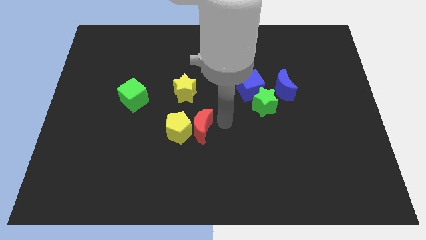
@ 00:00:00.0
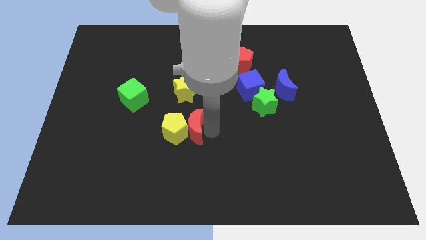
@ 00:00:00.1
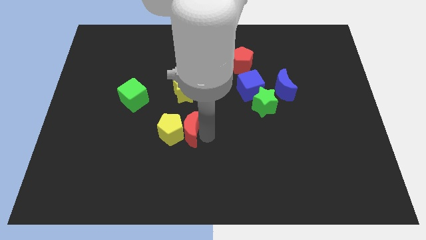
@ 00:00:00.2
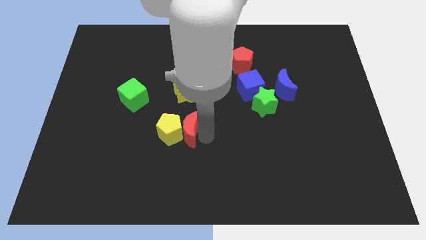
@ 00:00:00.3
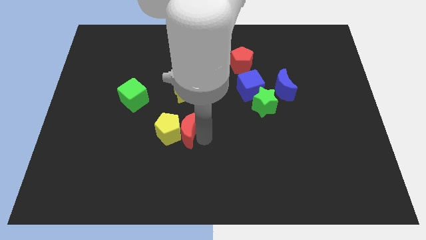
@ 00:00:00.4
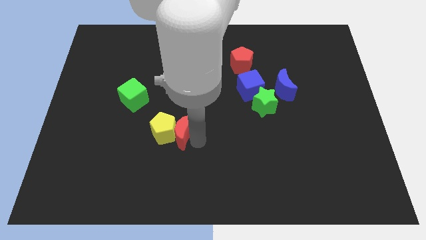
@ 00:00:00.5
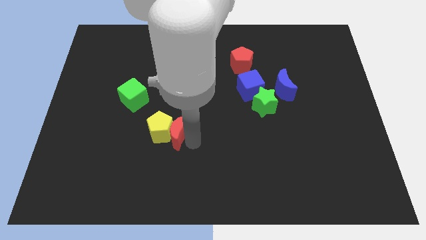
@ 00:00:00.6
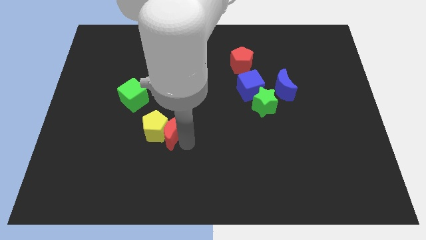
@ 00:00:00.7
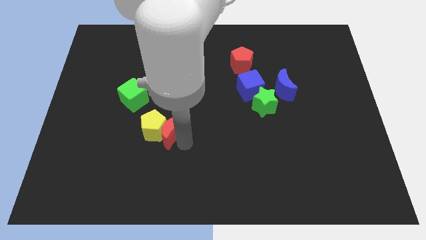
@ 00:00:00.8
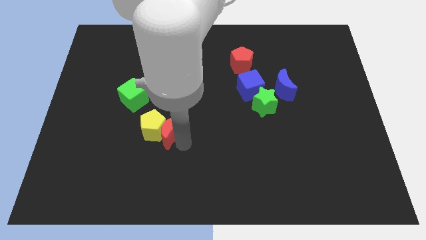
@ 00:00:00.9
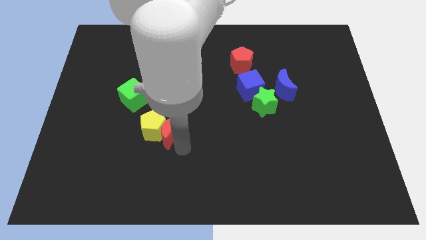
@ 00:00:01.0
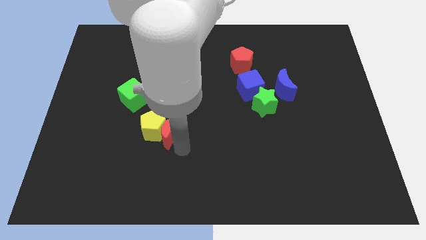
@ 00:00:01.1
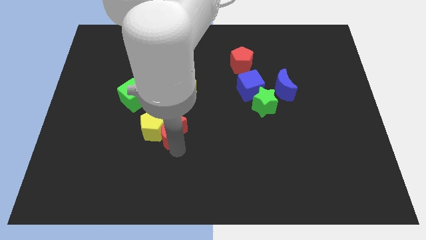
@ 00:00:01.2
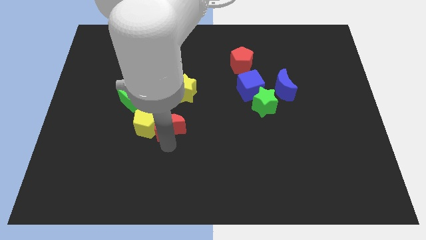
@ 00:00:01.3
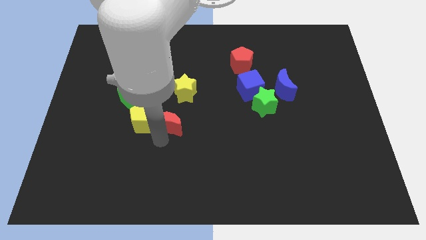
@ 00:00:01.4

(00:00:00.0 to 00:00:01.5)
drag the red crescent along with yellow pentagon towards the left side of the board

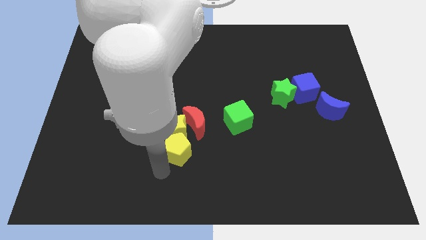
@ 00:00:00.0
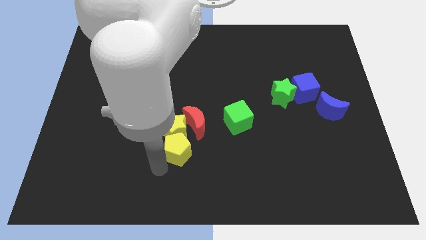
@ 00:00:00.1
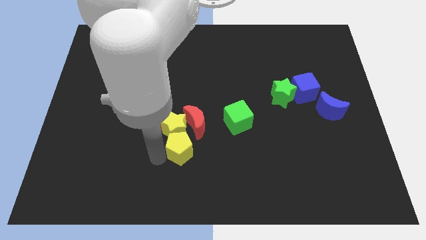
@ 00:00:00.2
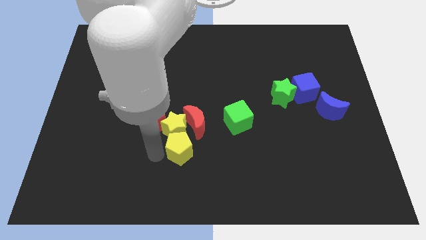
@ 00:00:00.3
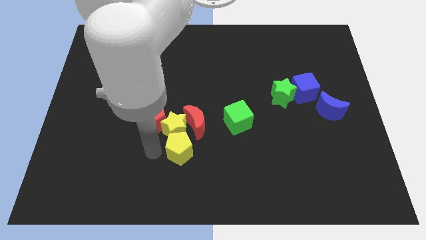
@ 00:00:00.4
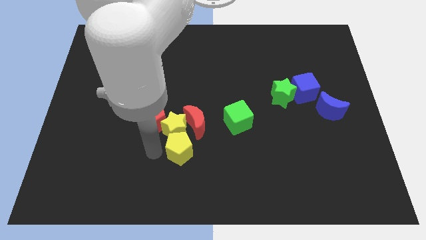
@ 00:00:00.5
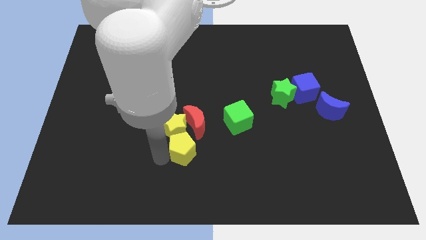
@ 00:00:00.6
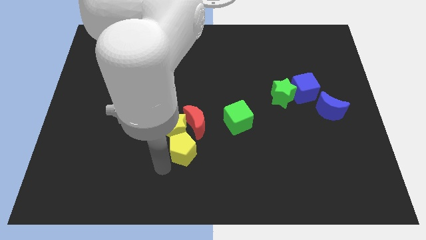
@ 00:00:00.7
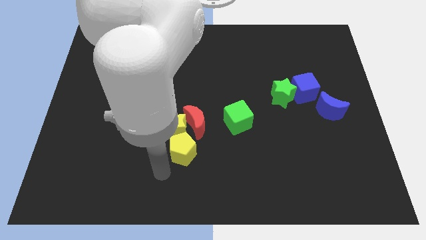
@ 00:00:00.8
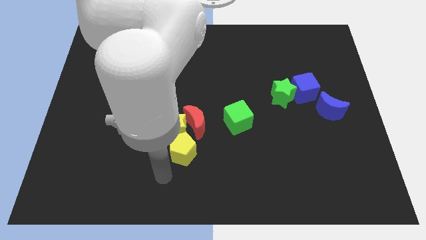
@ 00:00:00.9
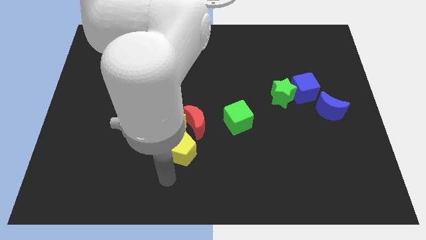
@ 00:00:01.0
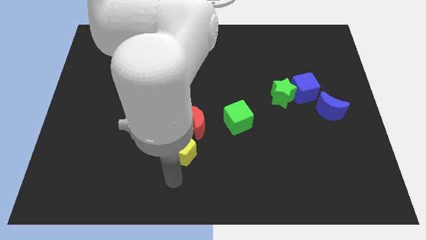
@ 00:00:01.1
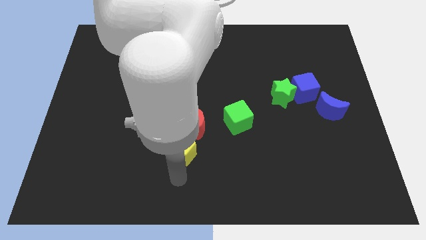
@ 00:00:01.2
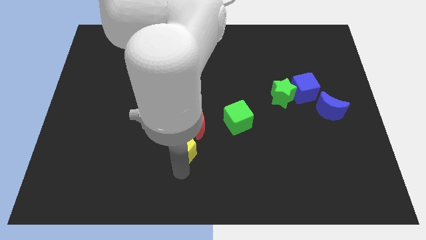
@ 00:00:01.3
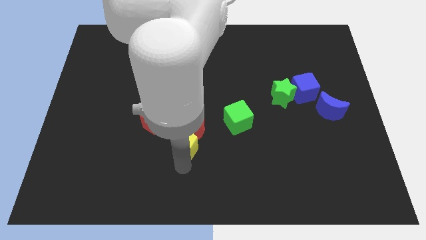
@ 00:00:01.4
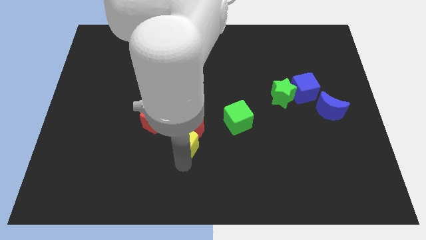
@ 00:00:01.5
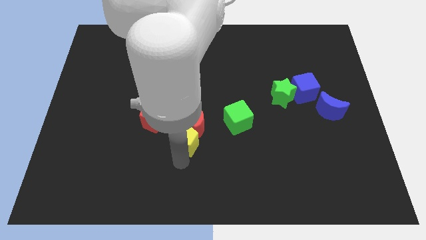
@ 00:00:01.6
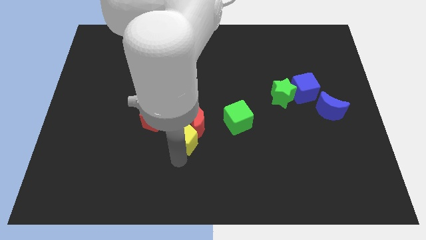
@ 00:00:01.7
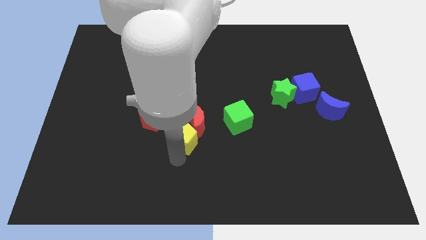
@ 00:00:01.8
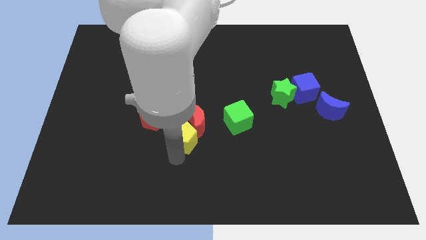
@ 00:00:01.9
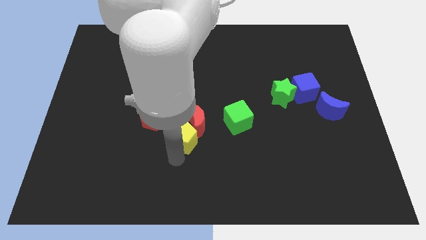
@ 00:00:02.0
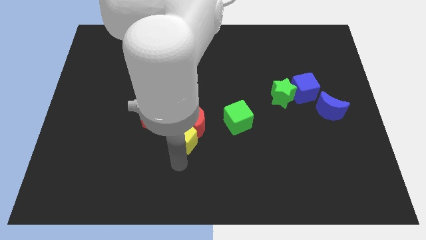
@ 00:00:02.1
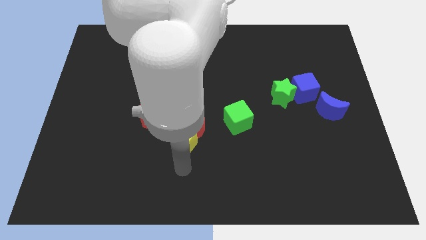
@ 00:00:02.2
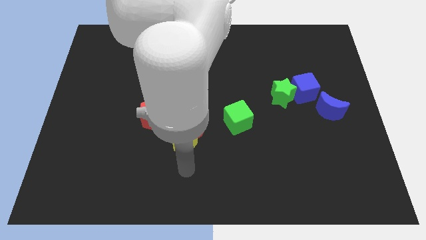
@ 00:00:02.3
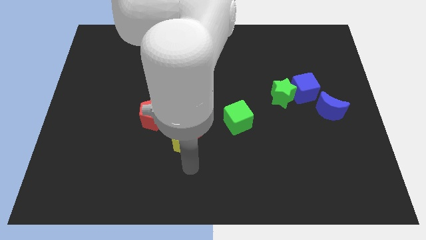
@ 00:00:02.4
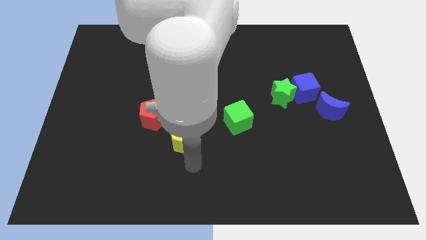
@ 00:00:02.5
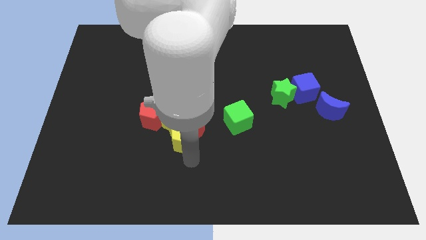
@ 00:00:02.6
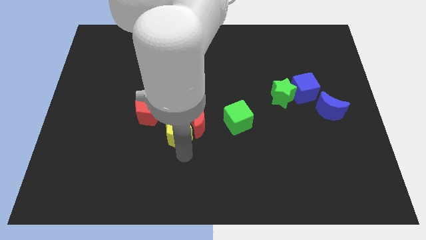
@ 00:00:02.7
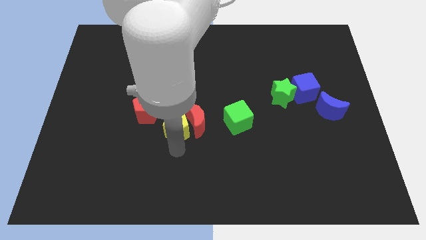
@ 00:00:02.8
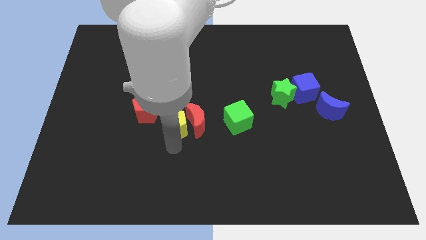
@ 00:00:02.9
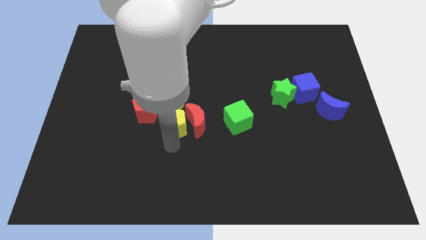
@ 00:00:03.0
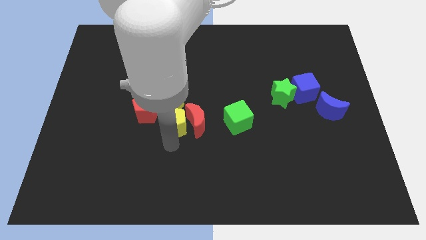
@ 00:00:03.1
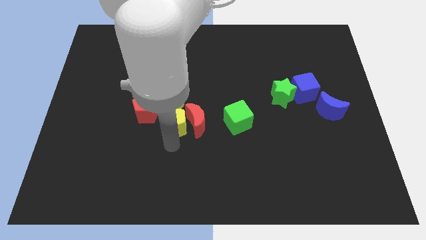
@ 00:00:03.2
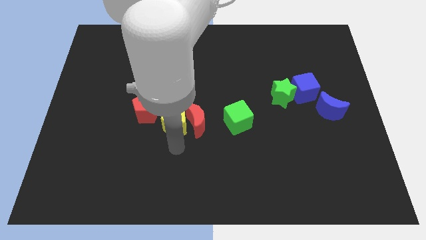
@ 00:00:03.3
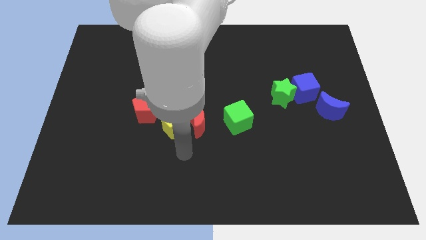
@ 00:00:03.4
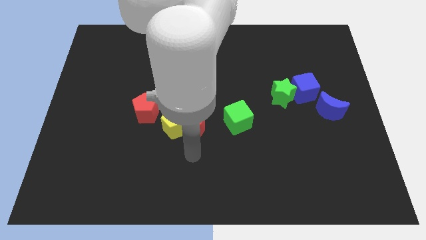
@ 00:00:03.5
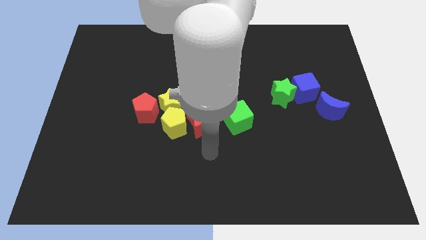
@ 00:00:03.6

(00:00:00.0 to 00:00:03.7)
push the yellow pentagon into the yellow star

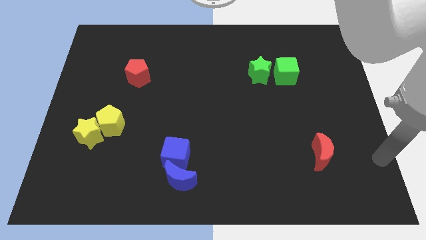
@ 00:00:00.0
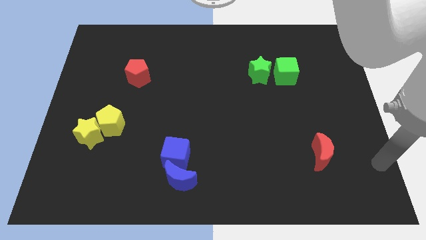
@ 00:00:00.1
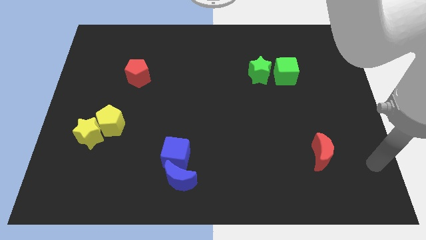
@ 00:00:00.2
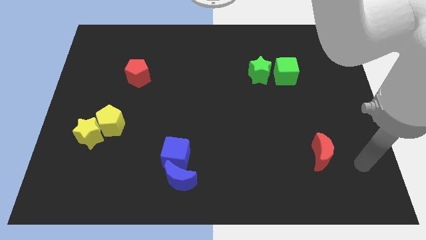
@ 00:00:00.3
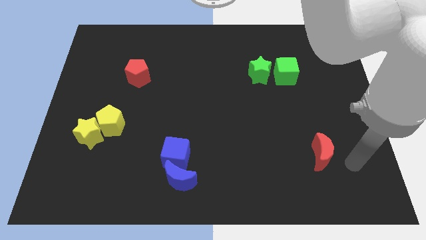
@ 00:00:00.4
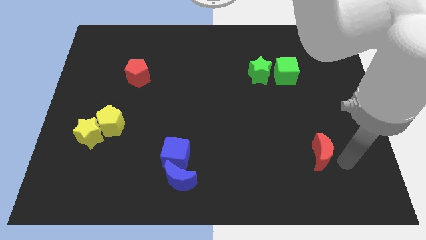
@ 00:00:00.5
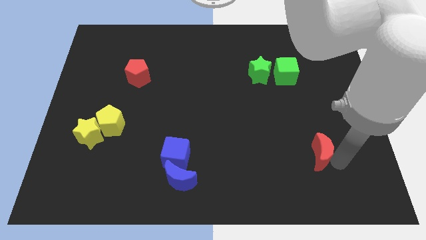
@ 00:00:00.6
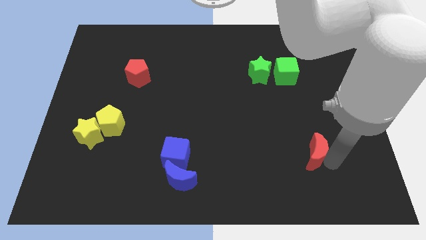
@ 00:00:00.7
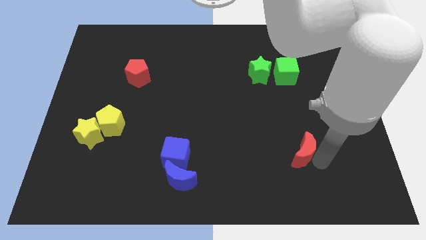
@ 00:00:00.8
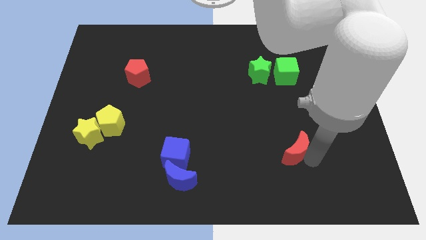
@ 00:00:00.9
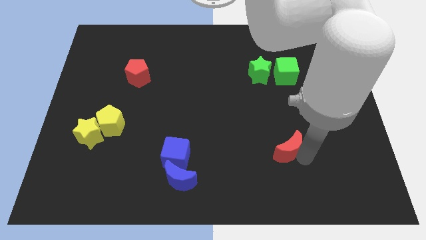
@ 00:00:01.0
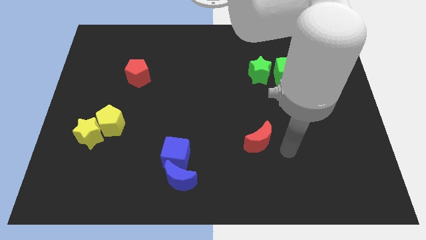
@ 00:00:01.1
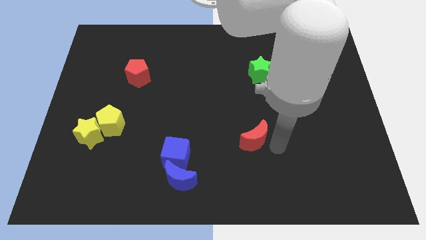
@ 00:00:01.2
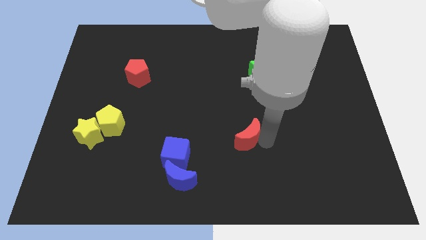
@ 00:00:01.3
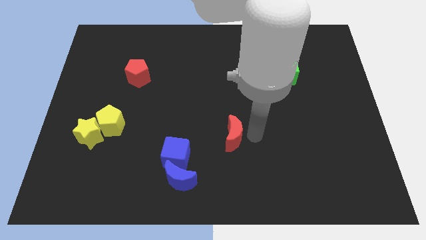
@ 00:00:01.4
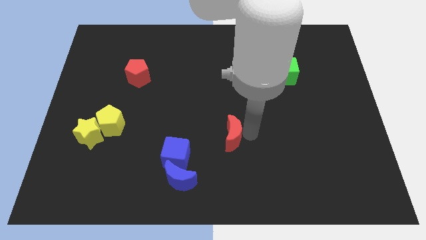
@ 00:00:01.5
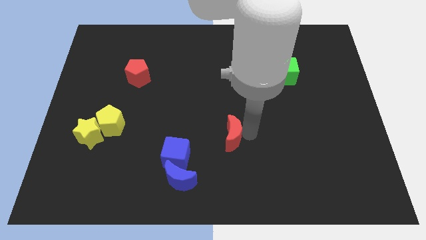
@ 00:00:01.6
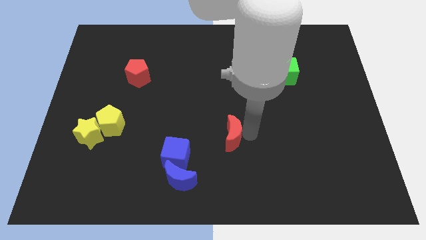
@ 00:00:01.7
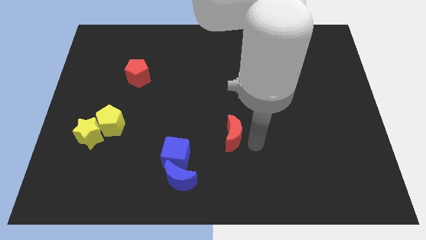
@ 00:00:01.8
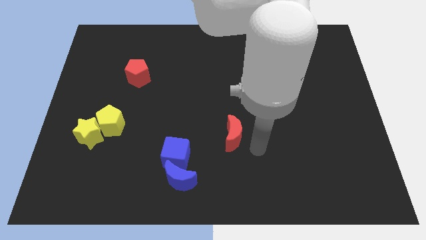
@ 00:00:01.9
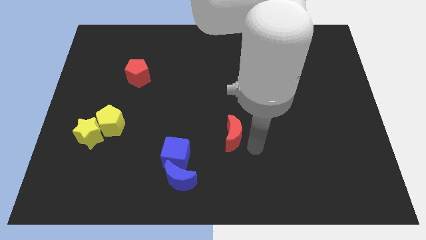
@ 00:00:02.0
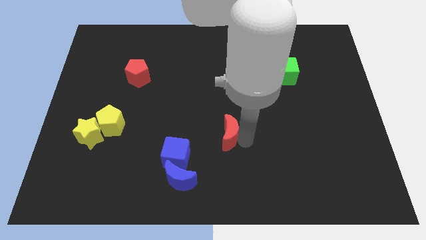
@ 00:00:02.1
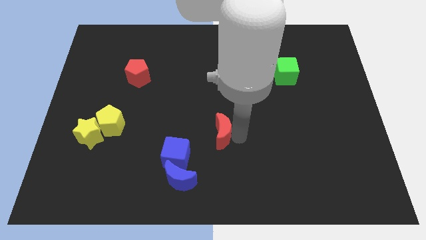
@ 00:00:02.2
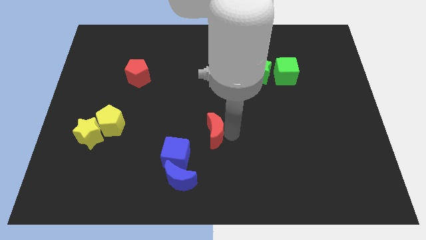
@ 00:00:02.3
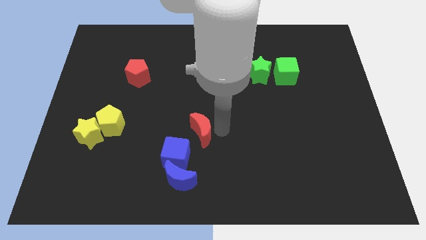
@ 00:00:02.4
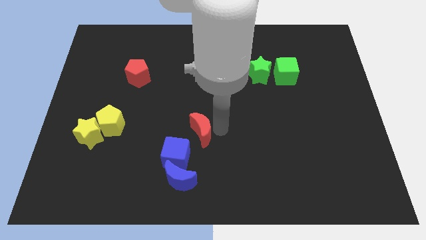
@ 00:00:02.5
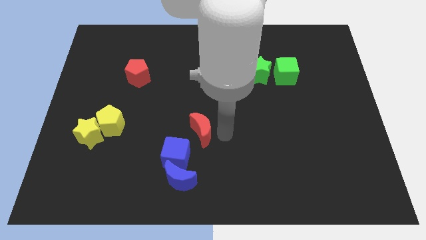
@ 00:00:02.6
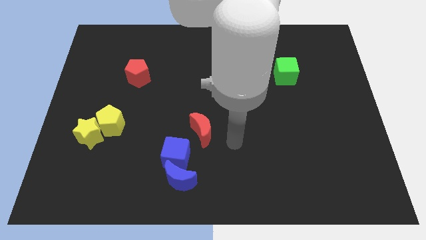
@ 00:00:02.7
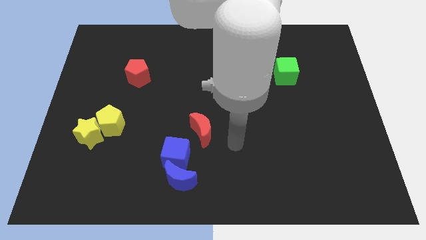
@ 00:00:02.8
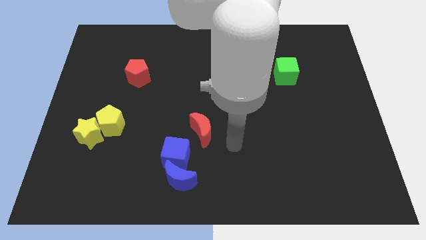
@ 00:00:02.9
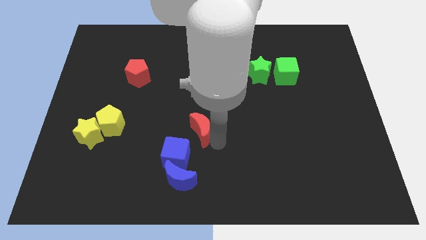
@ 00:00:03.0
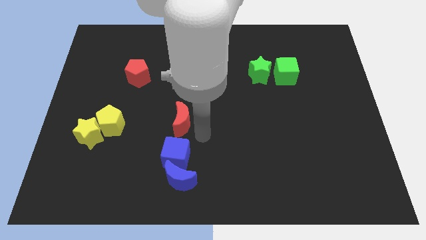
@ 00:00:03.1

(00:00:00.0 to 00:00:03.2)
push red crescent above blue cube

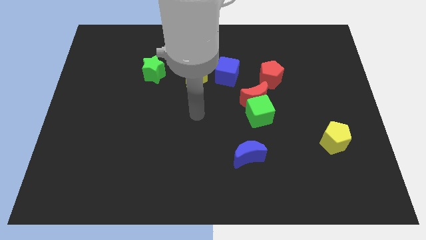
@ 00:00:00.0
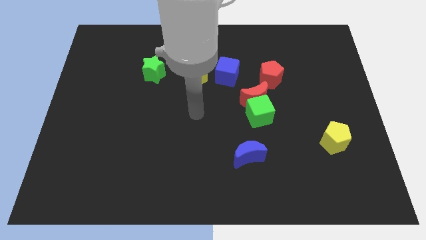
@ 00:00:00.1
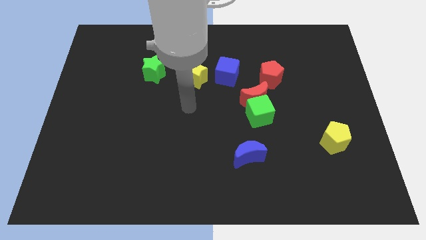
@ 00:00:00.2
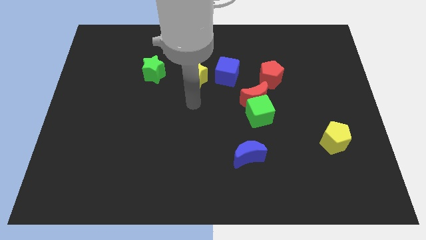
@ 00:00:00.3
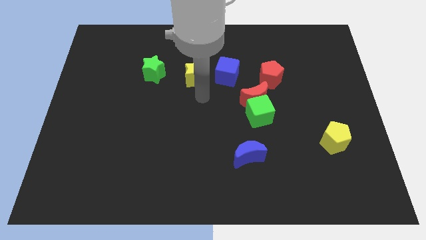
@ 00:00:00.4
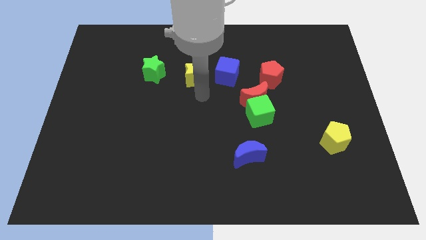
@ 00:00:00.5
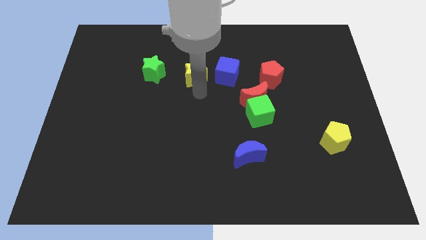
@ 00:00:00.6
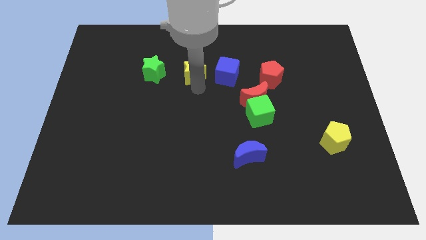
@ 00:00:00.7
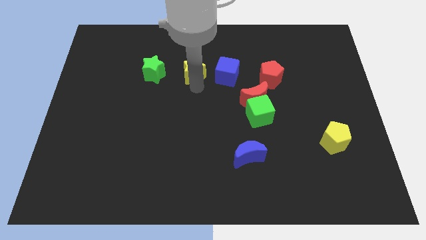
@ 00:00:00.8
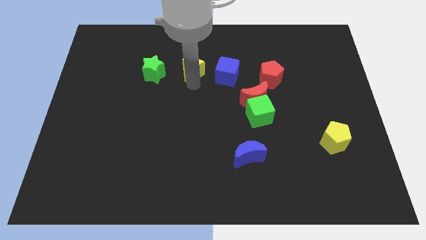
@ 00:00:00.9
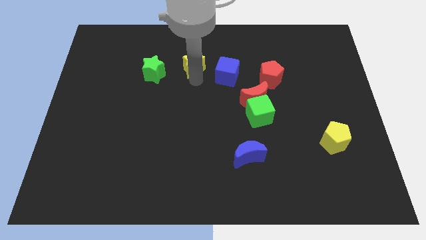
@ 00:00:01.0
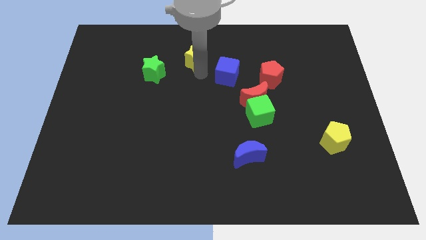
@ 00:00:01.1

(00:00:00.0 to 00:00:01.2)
move the yellow star to the top of the board
